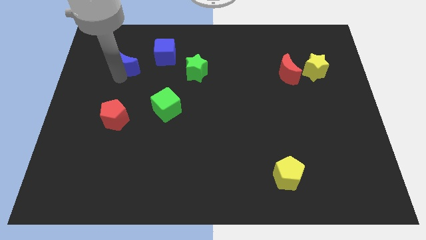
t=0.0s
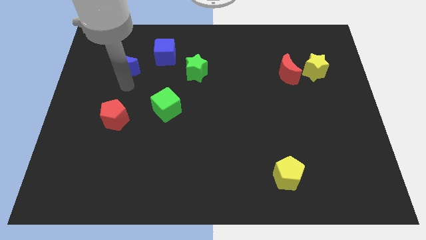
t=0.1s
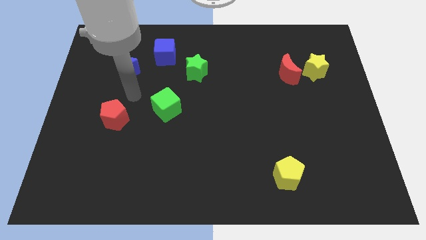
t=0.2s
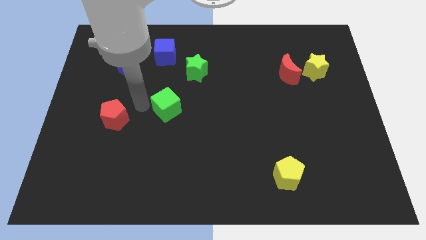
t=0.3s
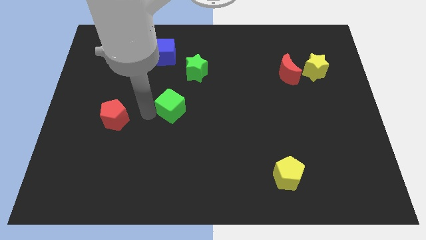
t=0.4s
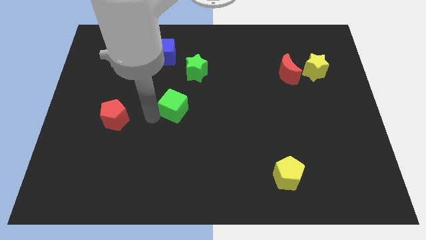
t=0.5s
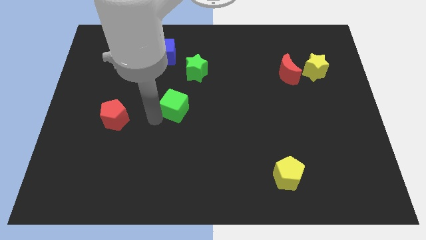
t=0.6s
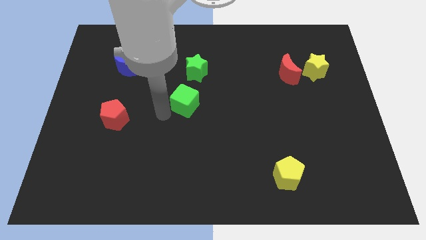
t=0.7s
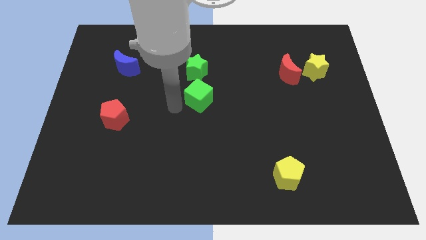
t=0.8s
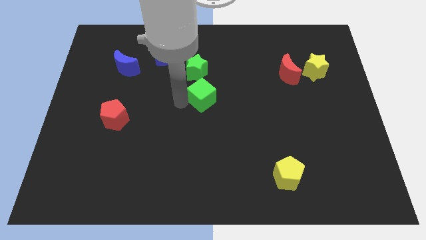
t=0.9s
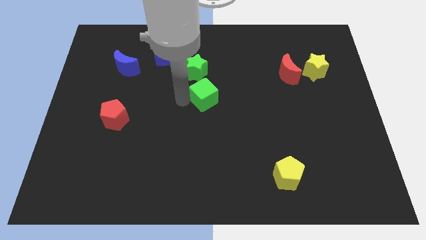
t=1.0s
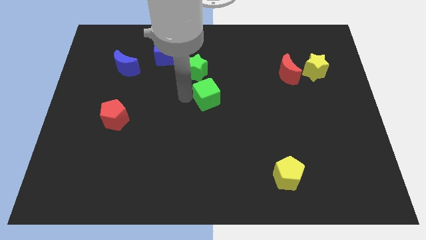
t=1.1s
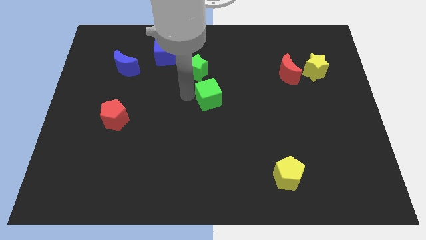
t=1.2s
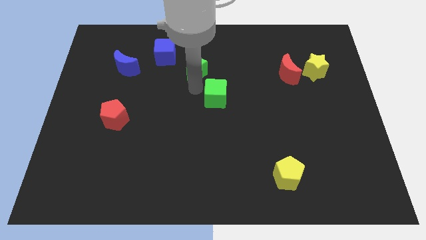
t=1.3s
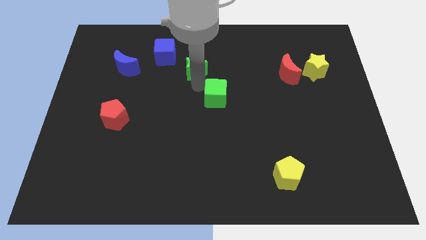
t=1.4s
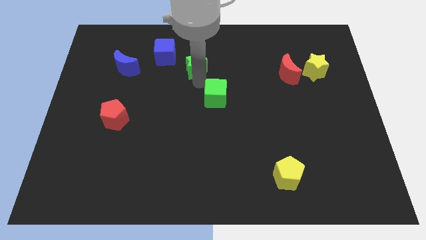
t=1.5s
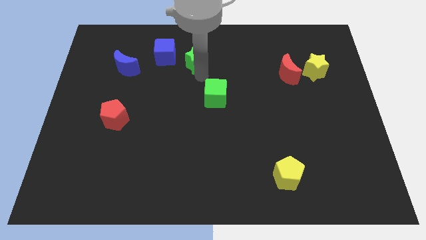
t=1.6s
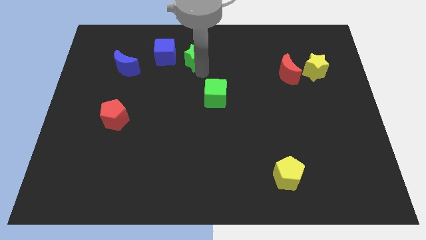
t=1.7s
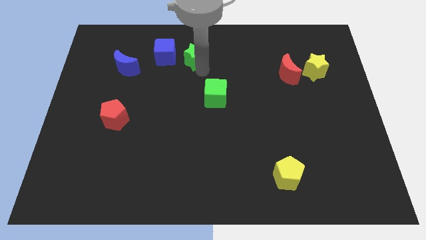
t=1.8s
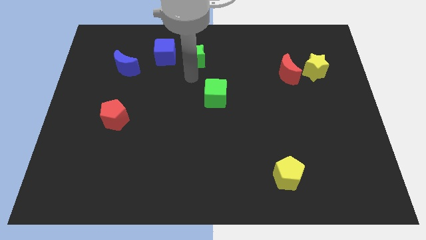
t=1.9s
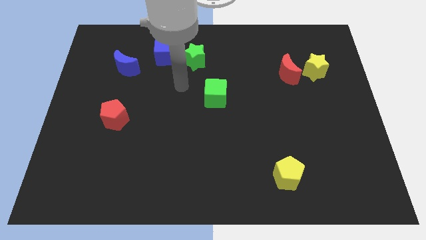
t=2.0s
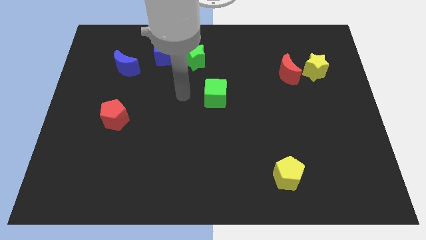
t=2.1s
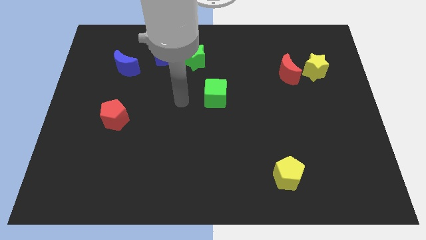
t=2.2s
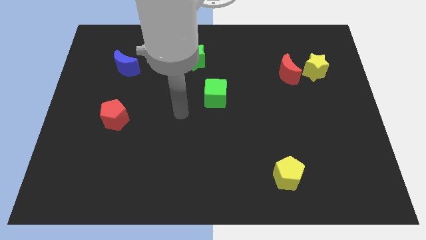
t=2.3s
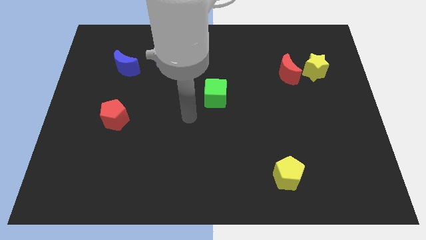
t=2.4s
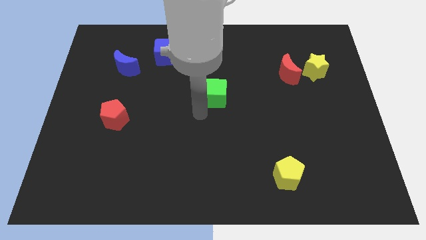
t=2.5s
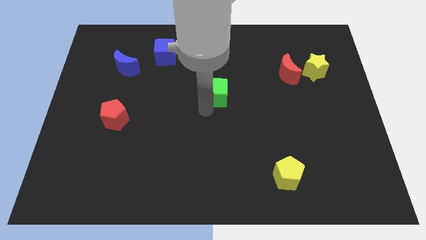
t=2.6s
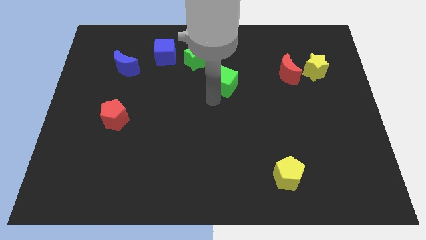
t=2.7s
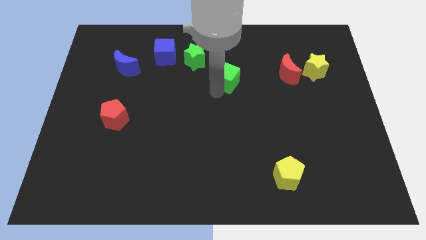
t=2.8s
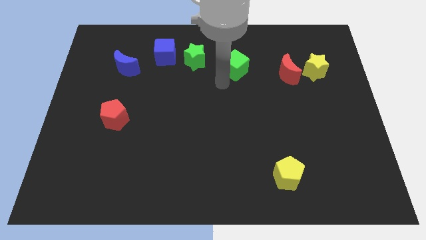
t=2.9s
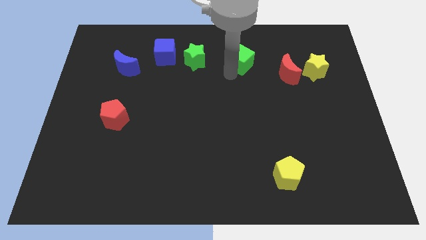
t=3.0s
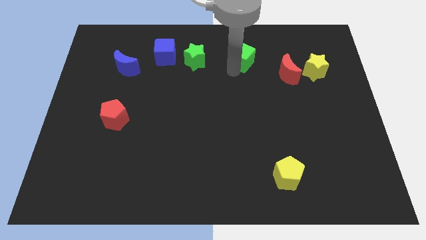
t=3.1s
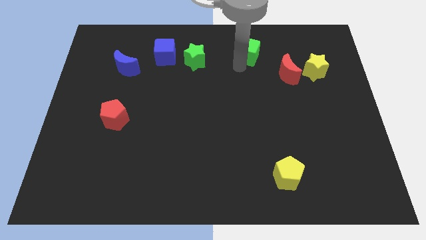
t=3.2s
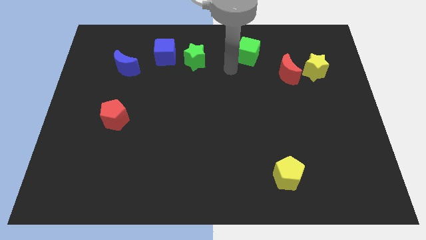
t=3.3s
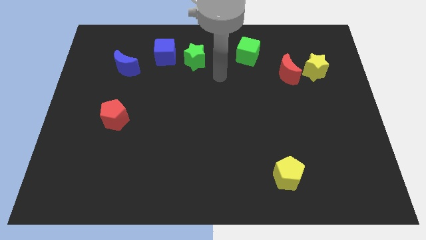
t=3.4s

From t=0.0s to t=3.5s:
move green cube to the top center of the board

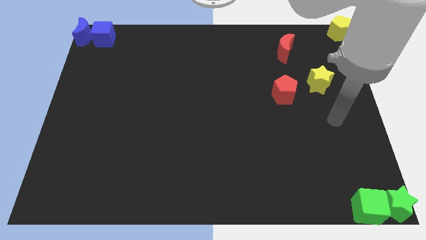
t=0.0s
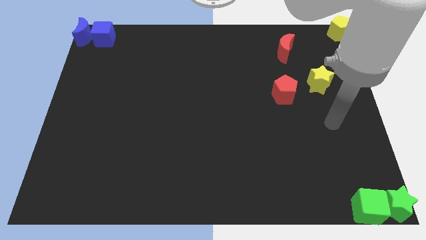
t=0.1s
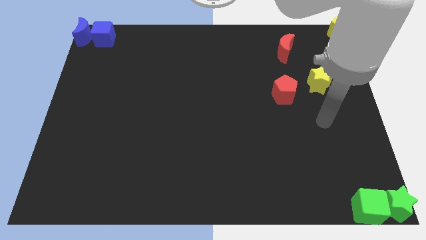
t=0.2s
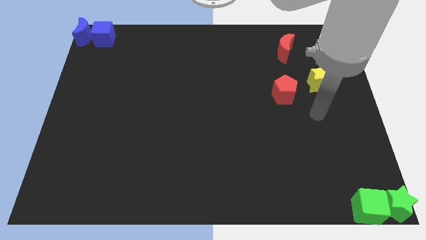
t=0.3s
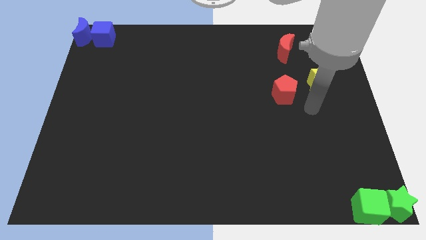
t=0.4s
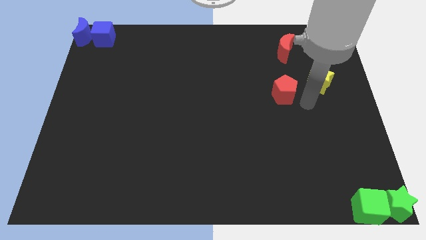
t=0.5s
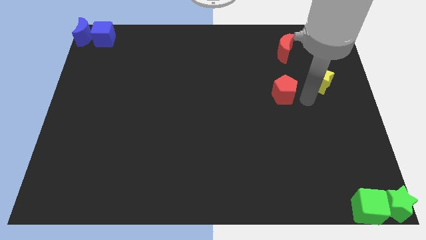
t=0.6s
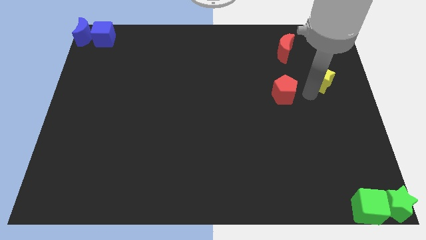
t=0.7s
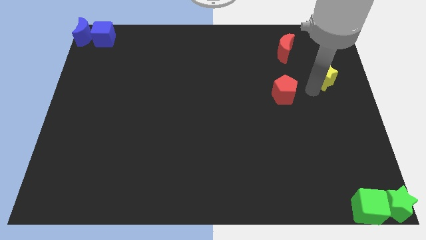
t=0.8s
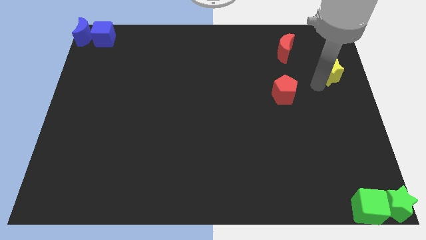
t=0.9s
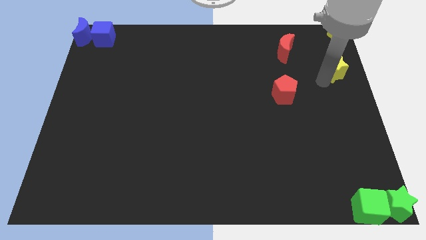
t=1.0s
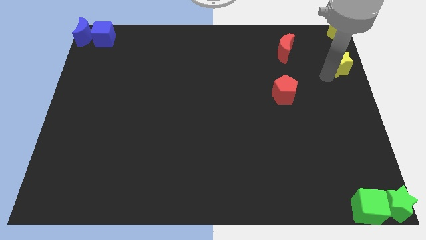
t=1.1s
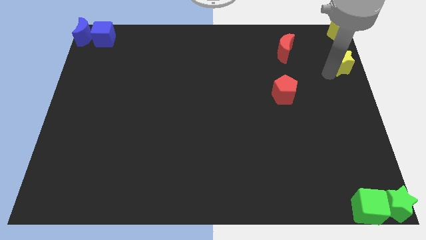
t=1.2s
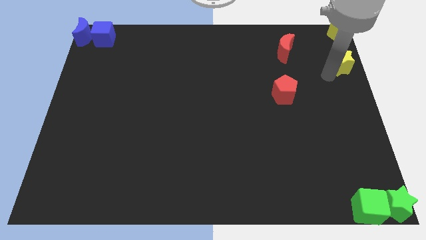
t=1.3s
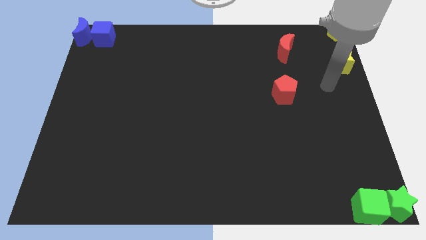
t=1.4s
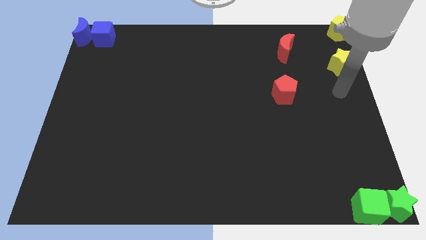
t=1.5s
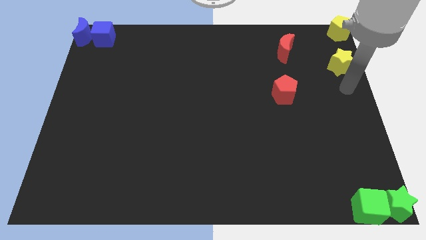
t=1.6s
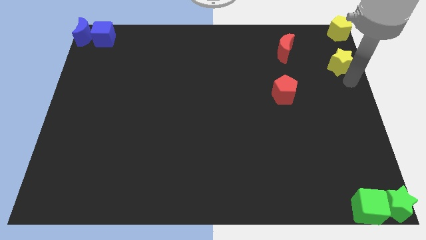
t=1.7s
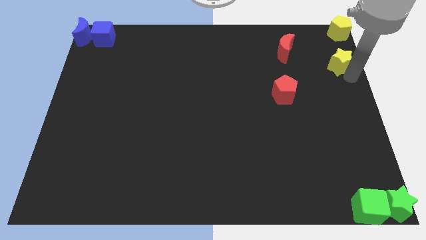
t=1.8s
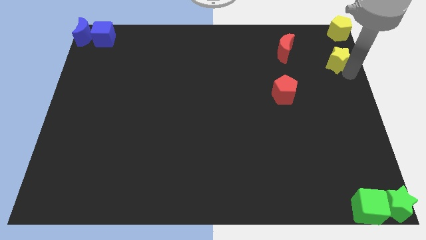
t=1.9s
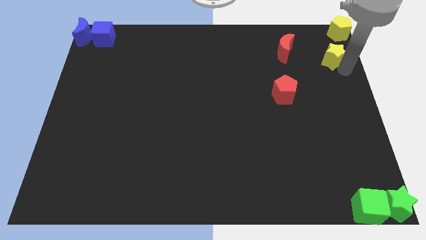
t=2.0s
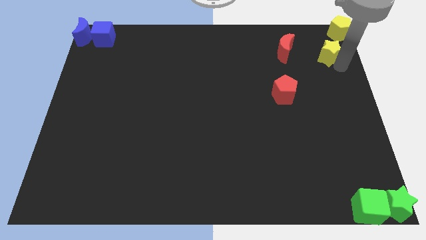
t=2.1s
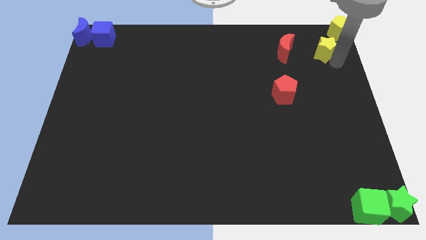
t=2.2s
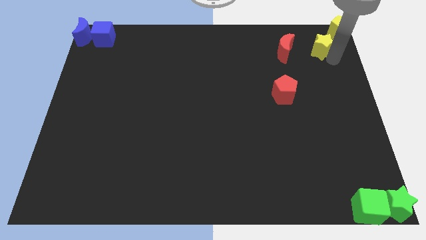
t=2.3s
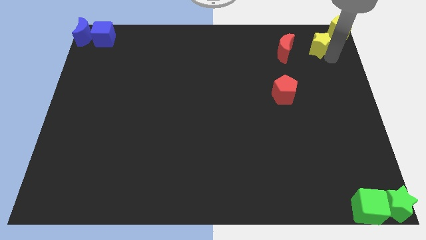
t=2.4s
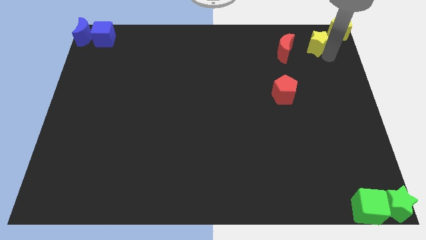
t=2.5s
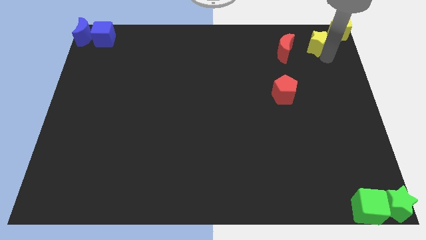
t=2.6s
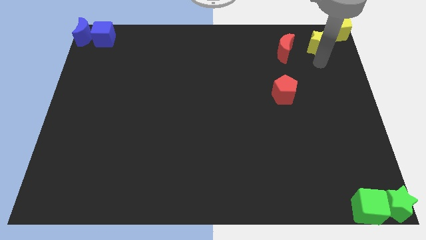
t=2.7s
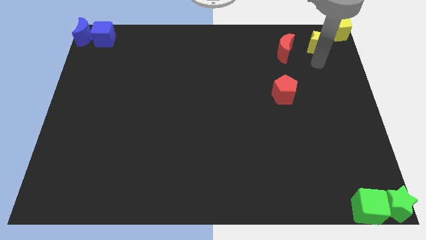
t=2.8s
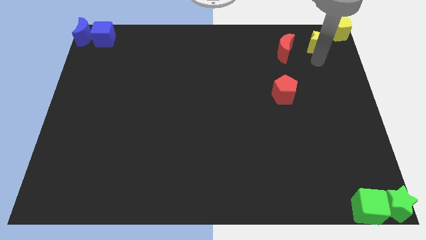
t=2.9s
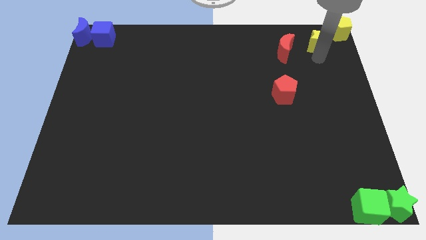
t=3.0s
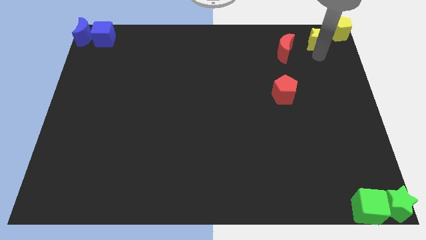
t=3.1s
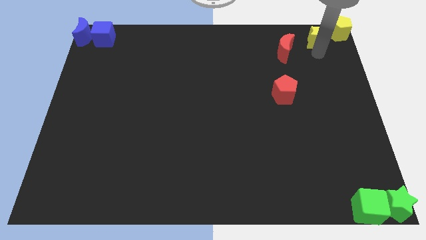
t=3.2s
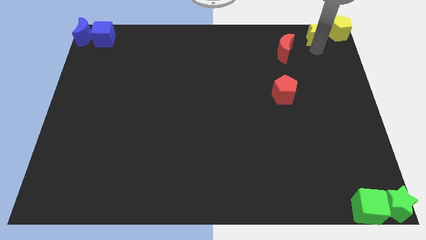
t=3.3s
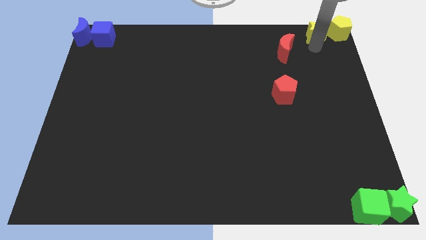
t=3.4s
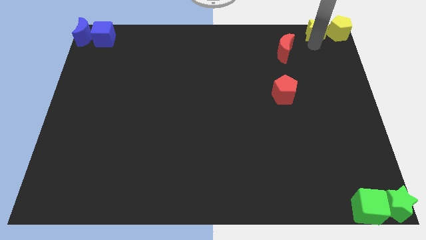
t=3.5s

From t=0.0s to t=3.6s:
push the yellow star to the left of the yellow pentagon

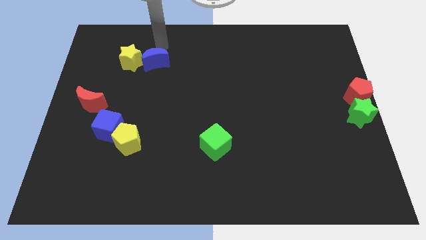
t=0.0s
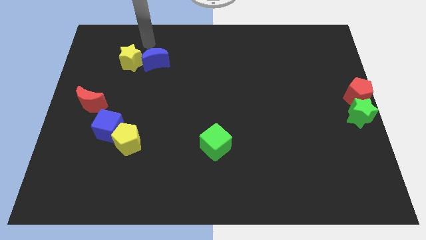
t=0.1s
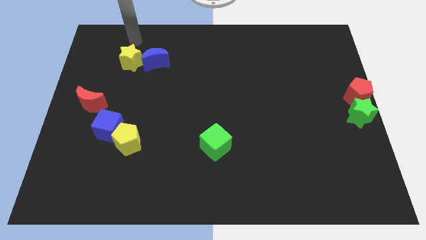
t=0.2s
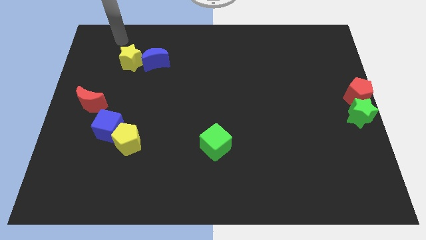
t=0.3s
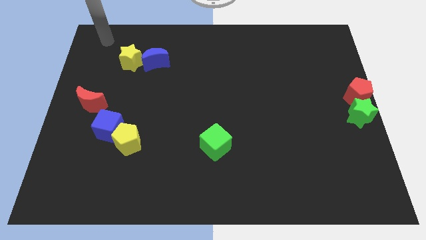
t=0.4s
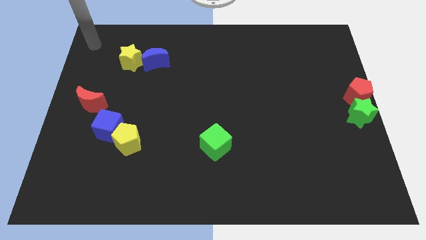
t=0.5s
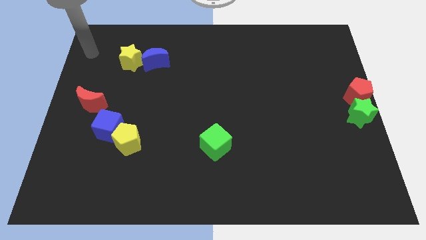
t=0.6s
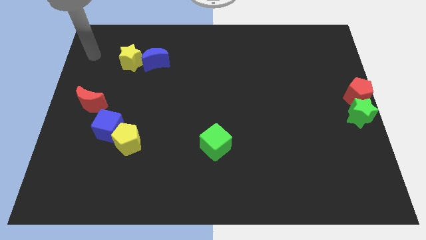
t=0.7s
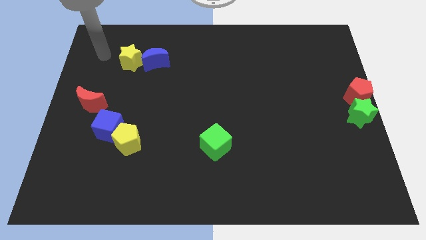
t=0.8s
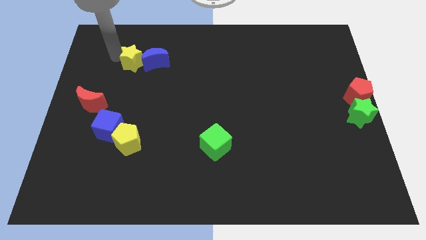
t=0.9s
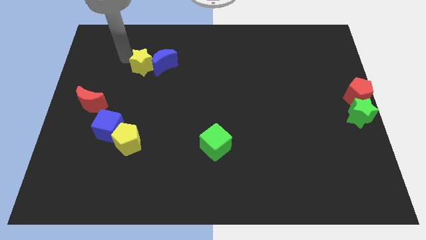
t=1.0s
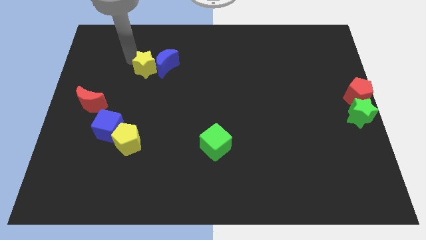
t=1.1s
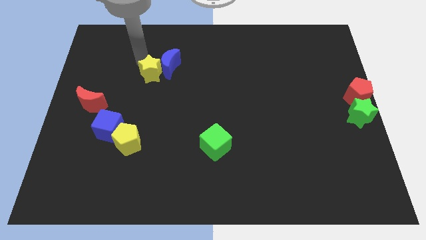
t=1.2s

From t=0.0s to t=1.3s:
push the yellow star along with the blue crescent slightly to the right

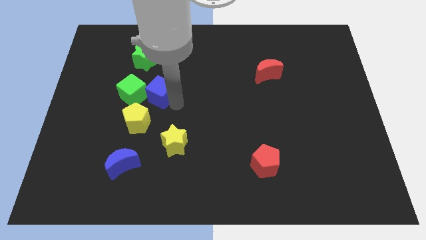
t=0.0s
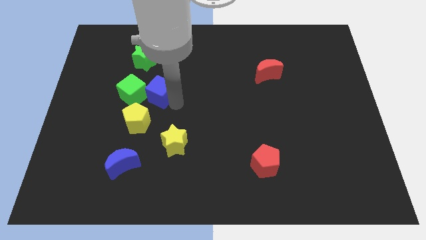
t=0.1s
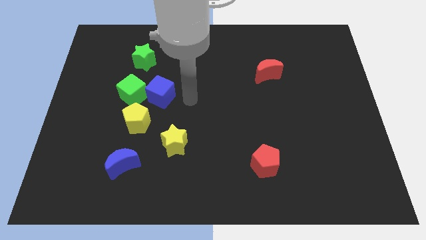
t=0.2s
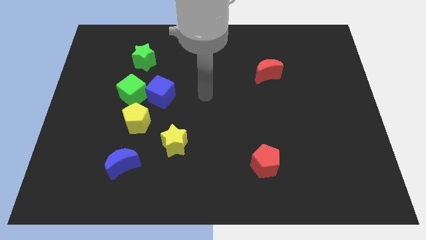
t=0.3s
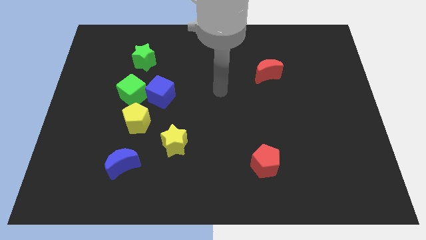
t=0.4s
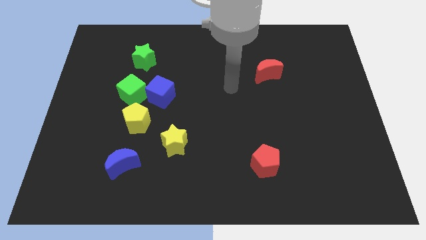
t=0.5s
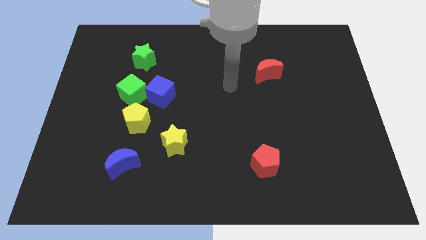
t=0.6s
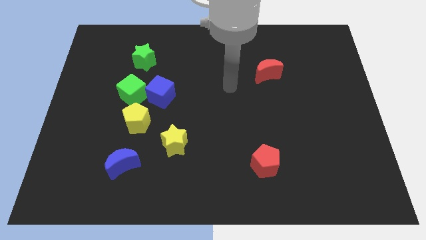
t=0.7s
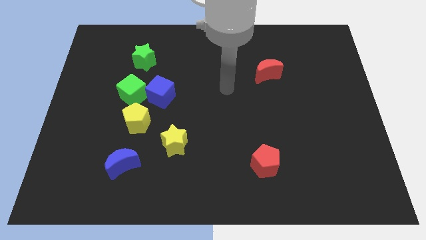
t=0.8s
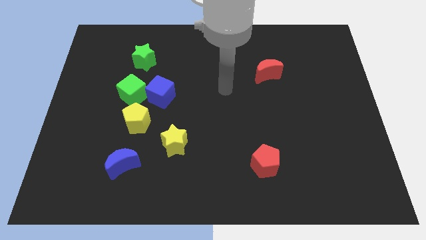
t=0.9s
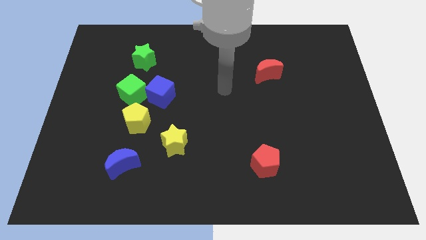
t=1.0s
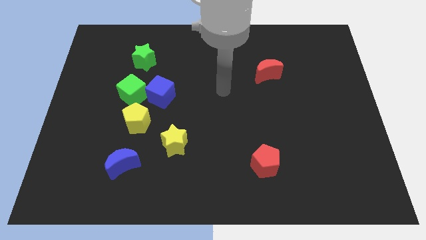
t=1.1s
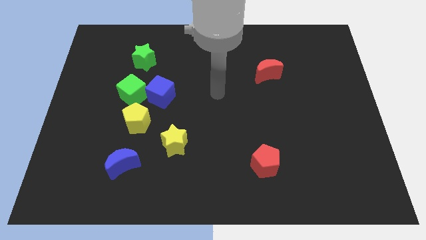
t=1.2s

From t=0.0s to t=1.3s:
move your hand away from the blue cube
